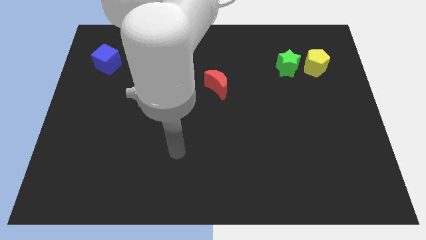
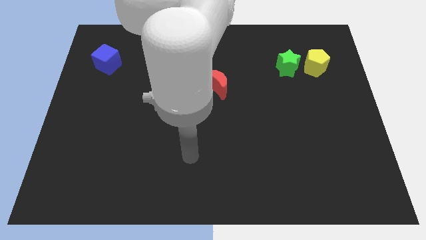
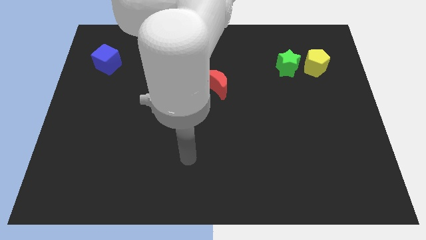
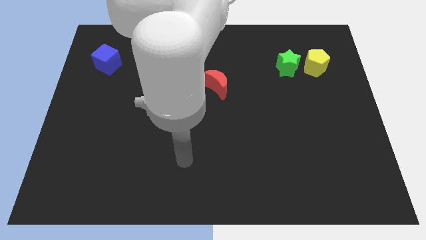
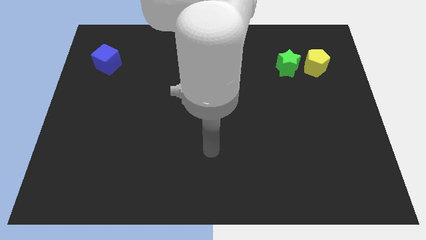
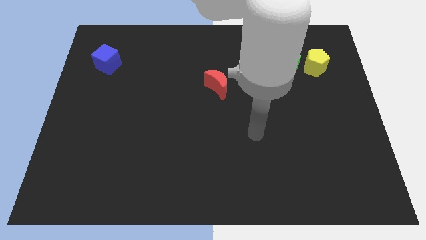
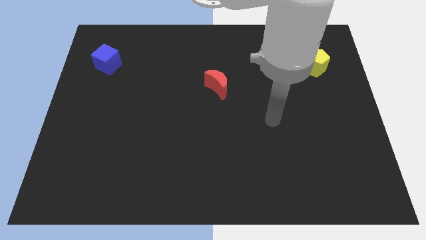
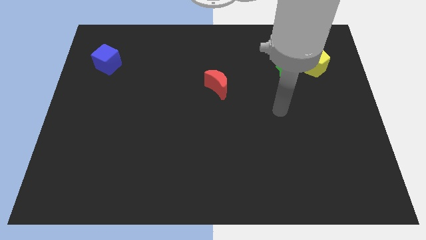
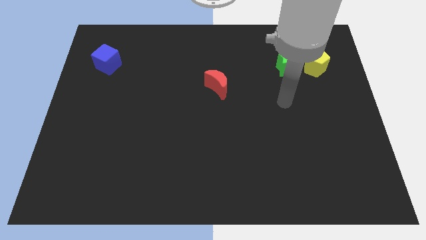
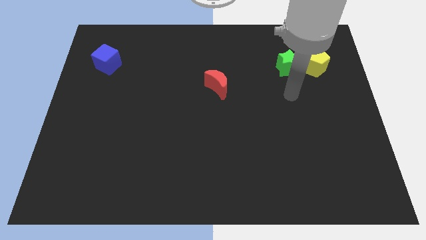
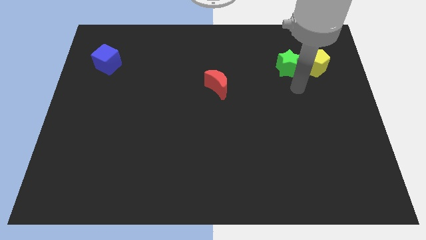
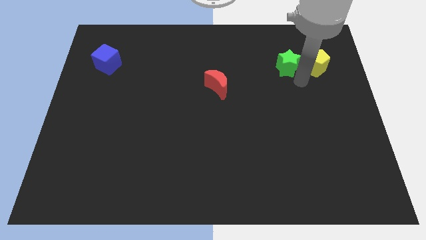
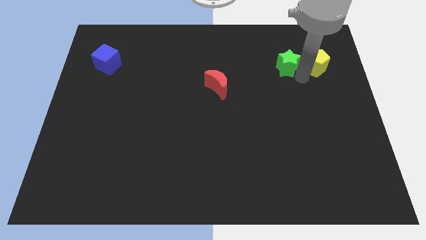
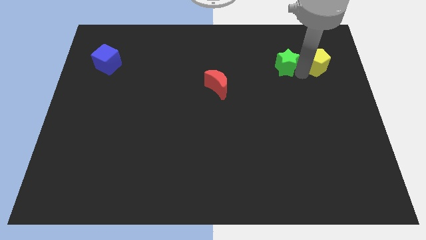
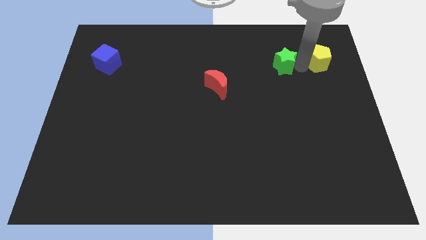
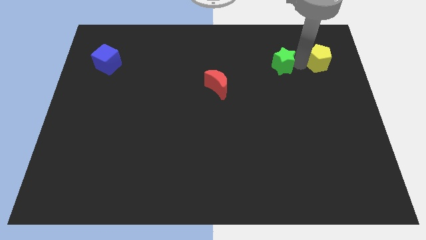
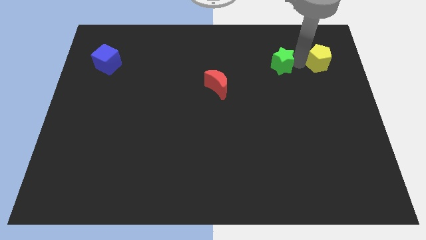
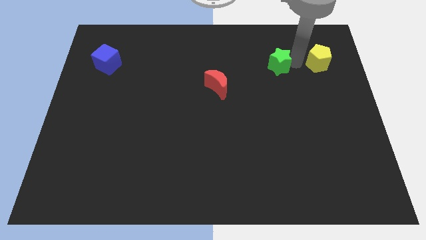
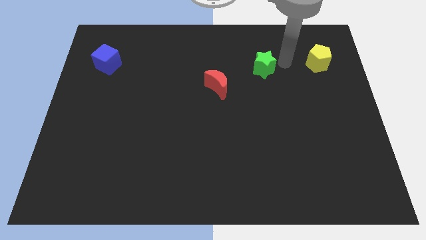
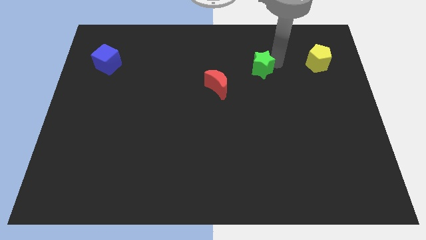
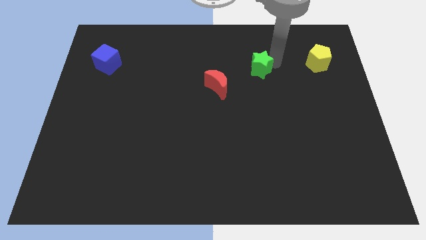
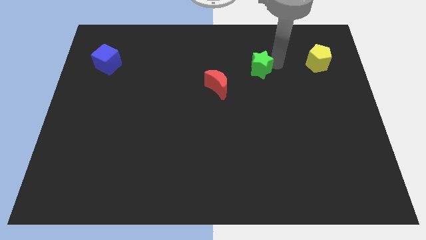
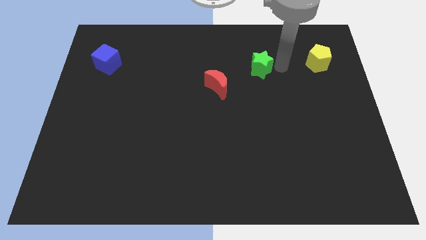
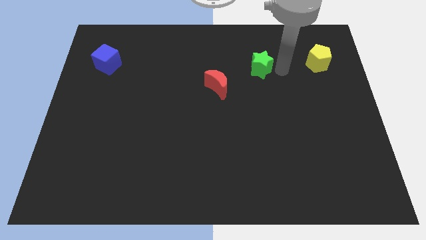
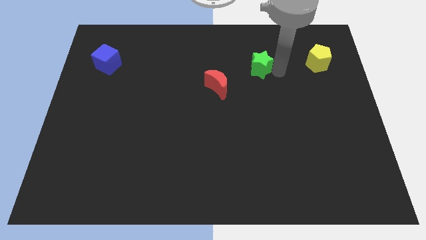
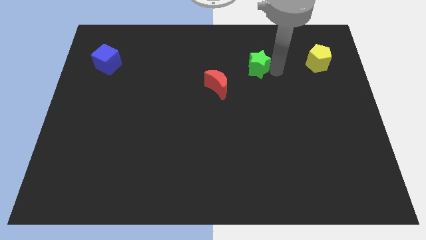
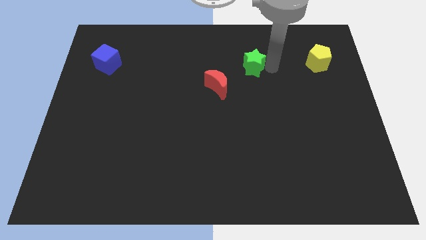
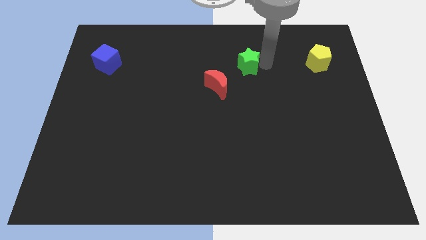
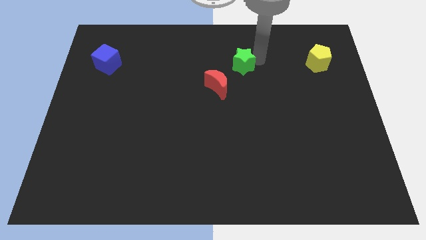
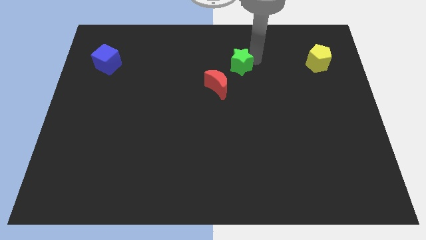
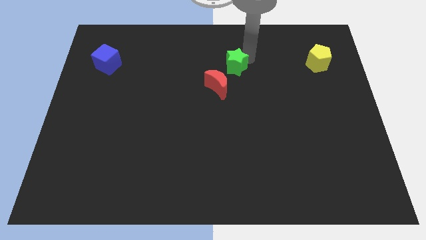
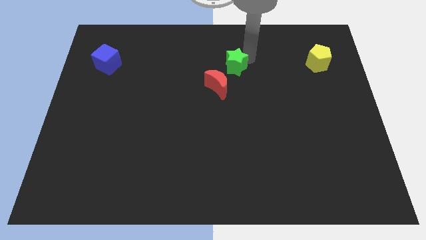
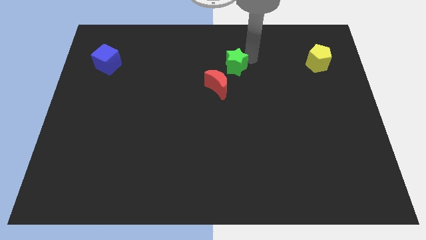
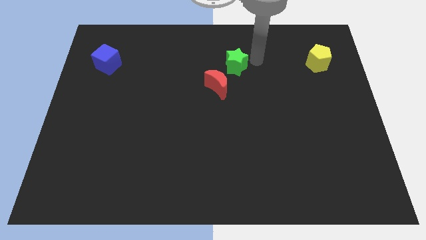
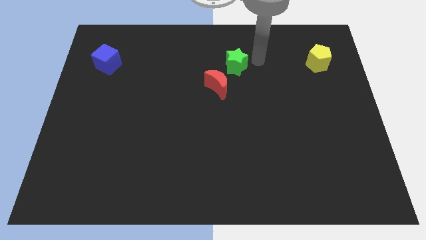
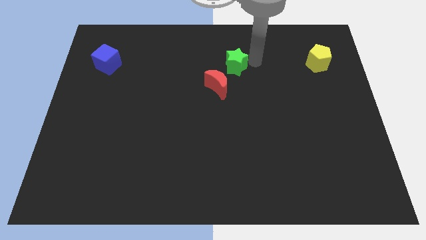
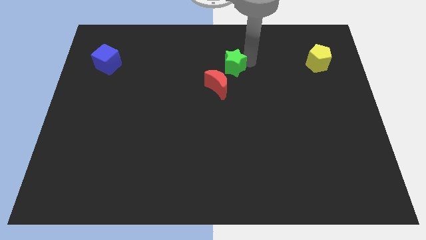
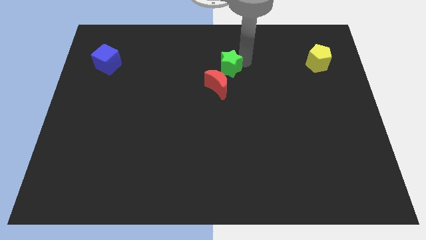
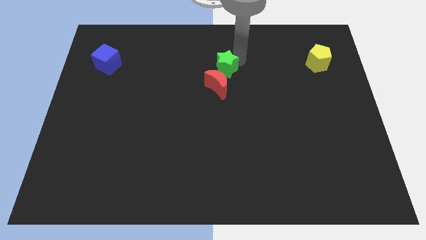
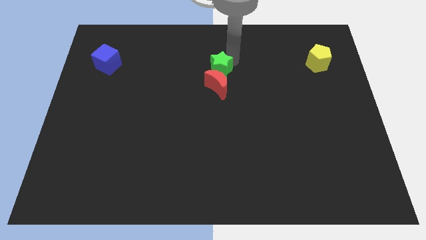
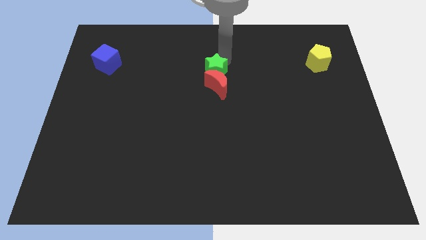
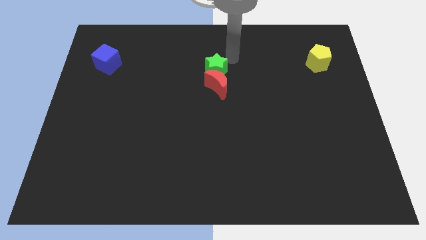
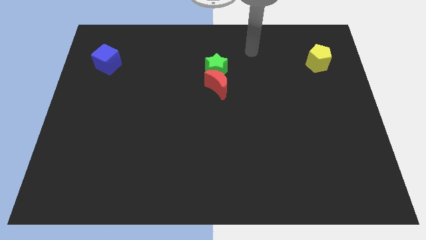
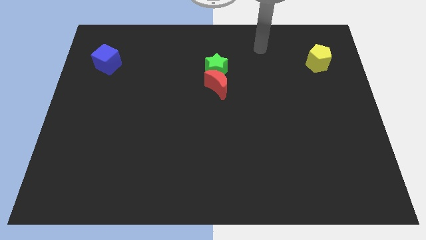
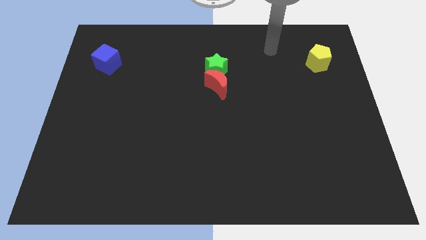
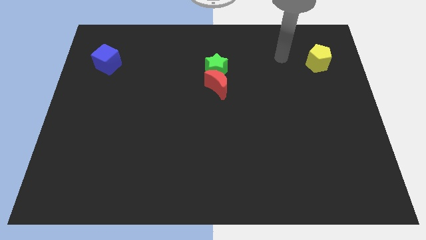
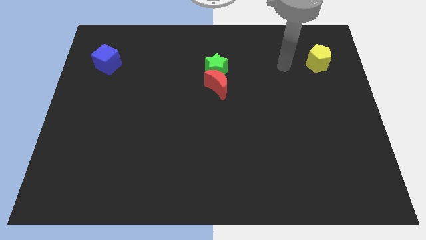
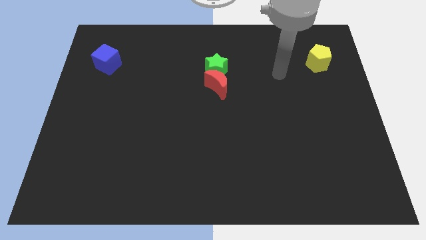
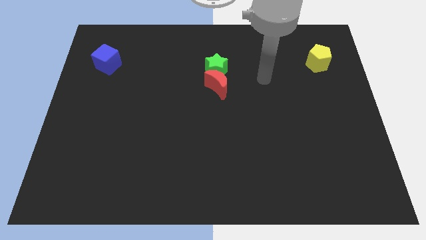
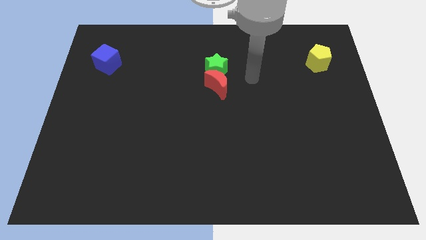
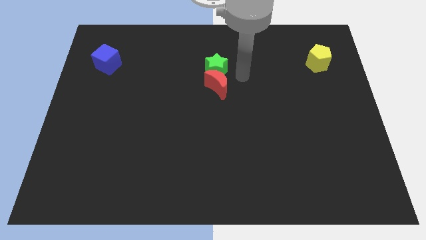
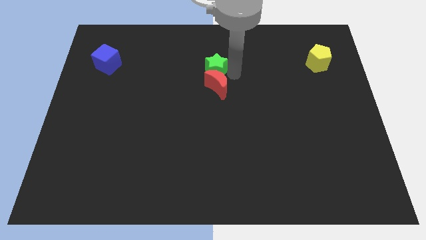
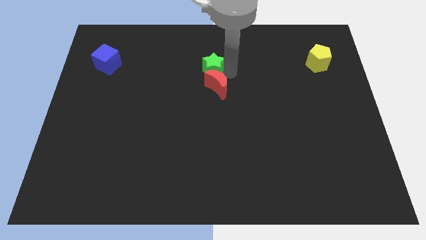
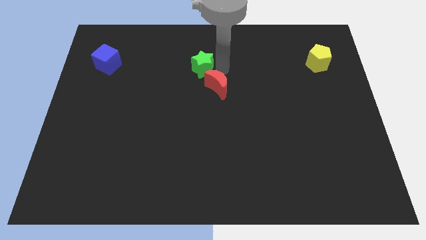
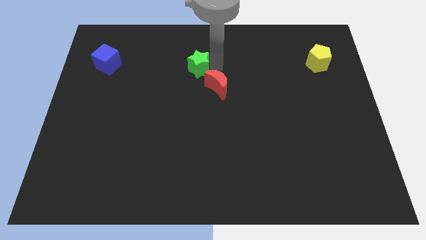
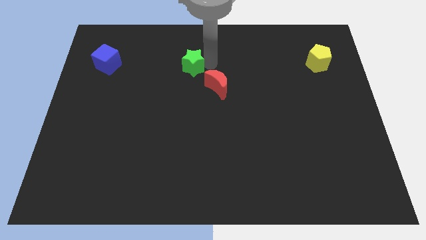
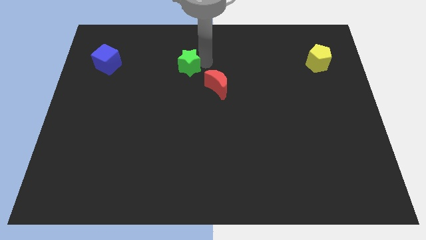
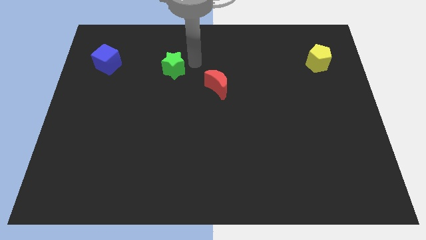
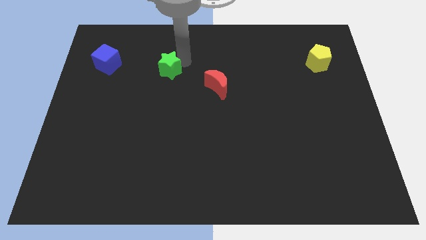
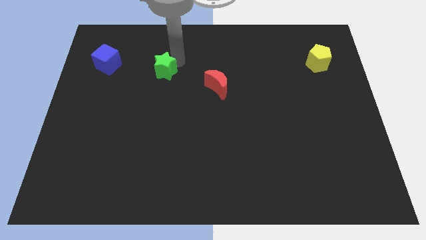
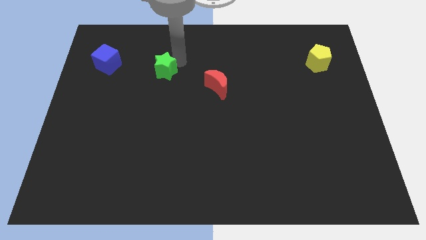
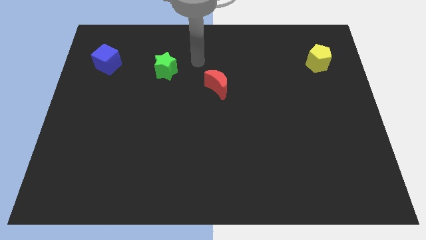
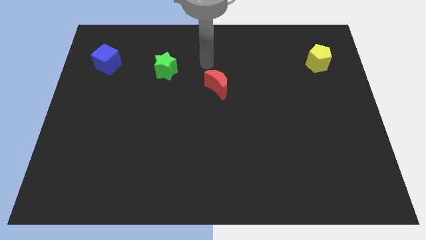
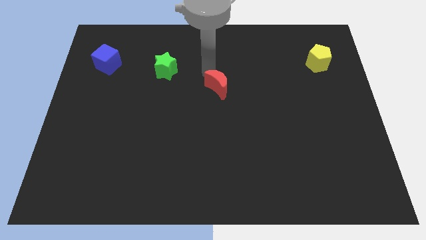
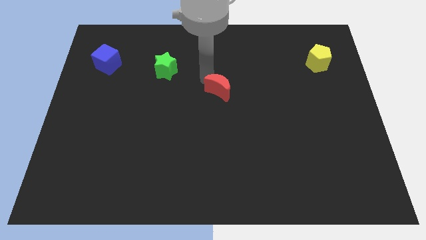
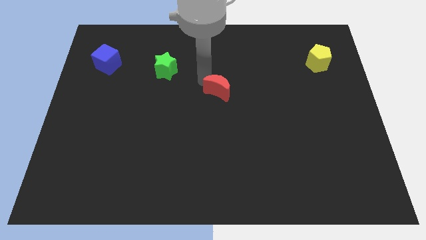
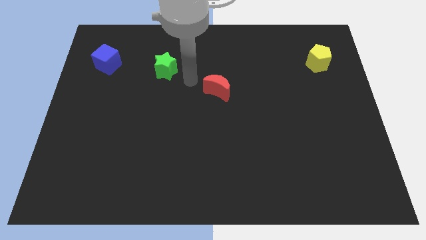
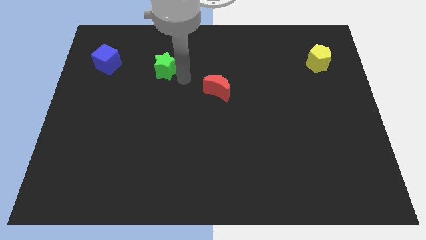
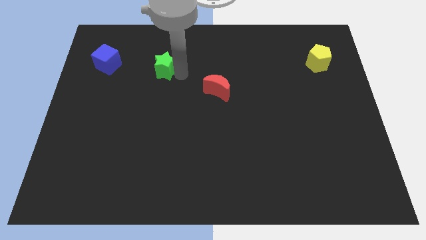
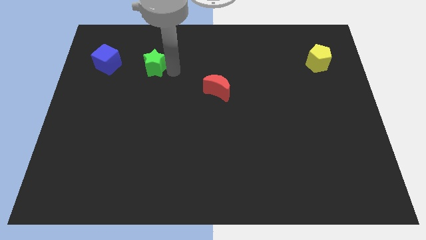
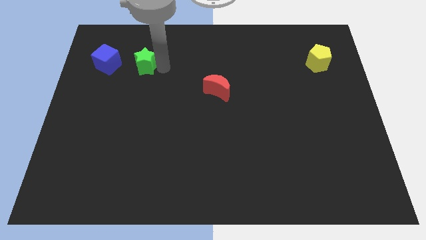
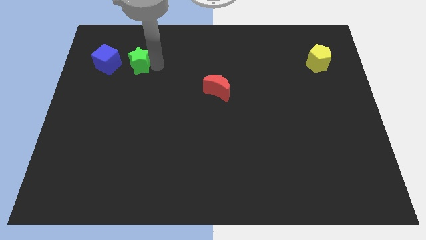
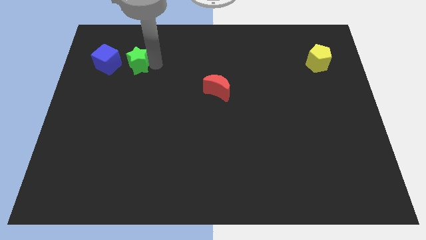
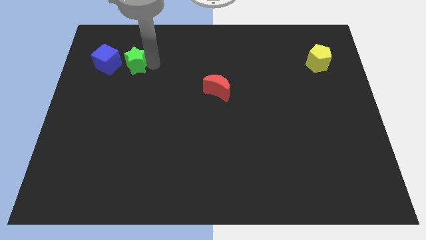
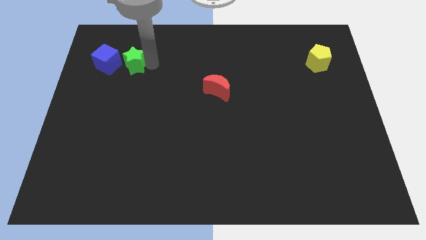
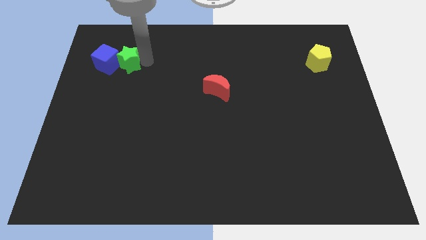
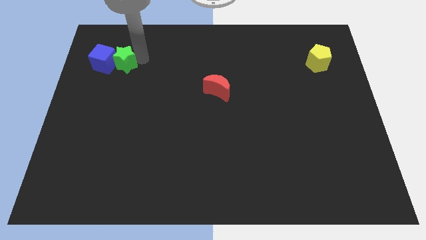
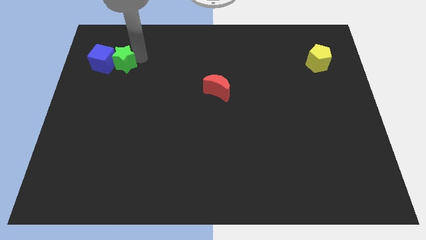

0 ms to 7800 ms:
push the green block next to the blue block

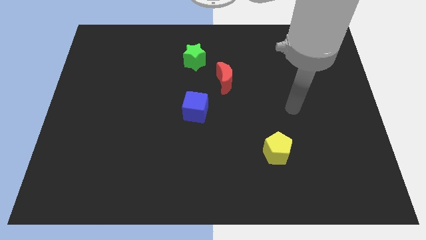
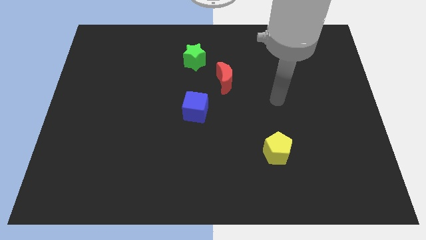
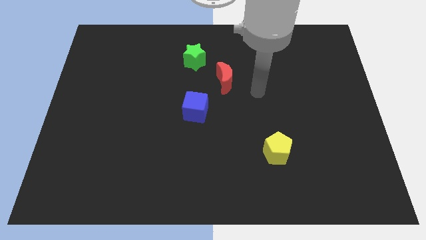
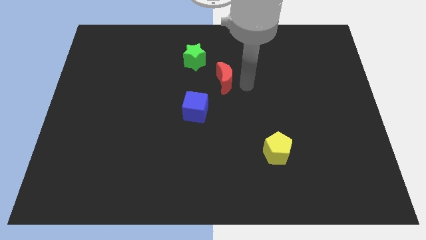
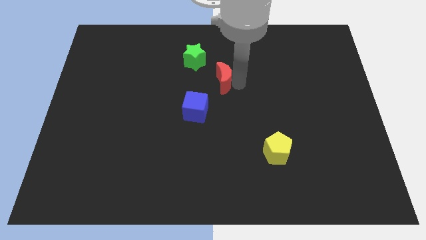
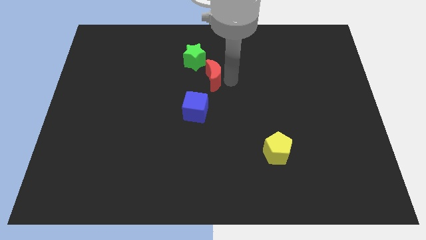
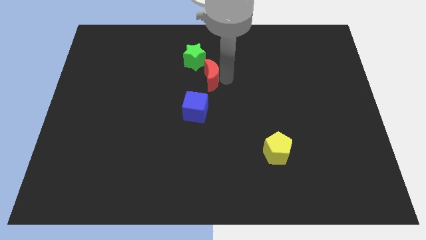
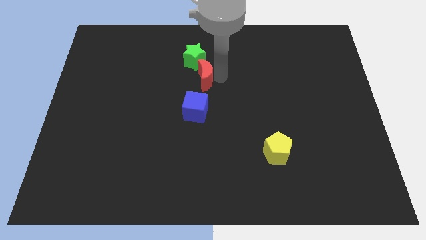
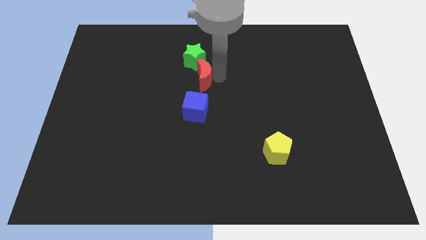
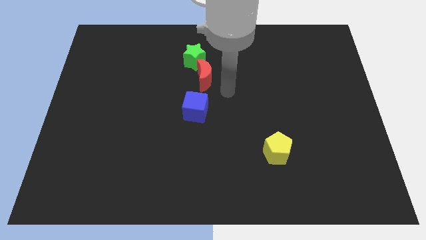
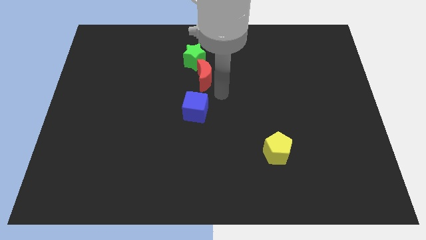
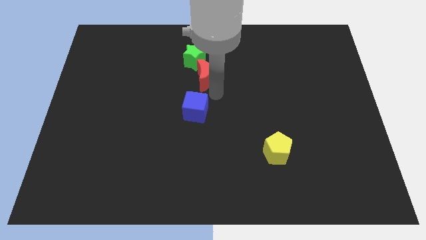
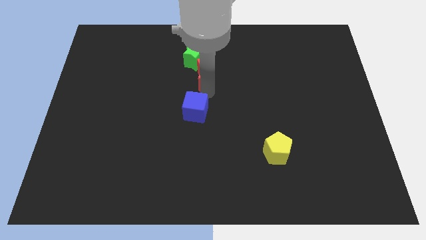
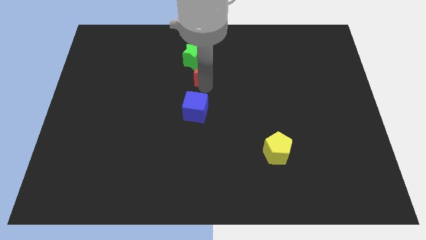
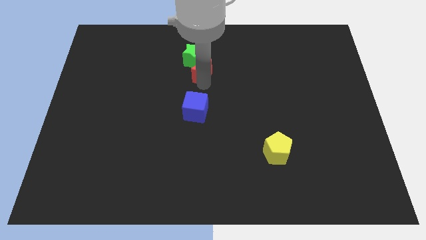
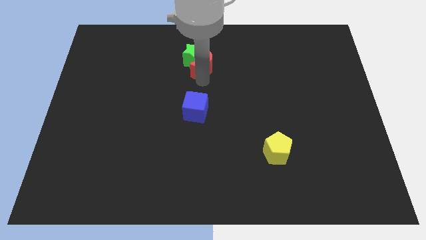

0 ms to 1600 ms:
slide the red moon close to the green star
